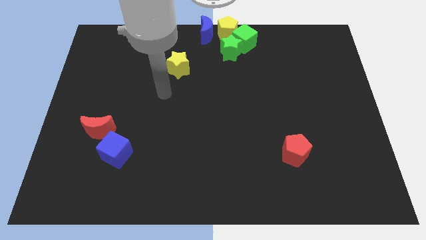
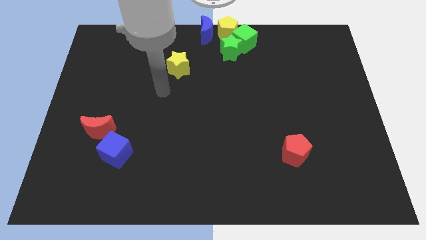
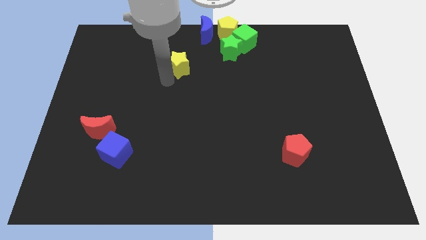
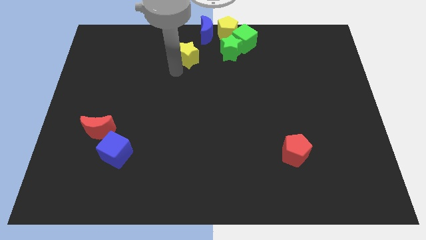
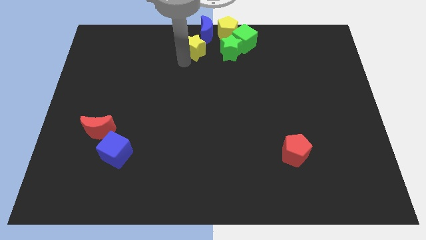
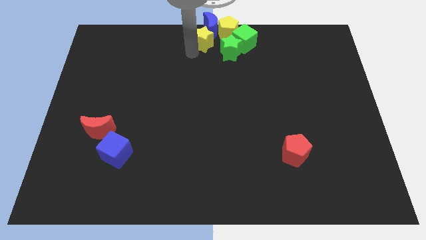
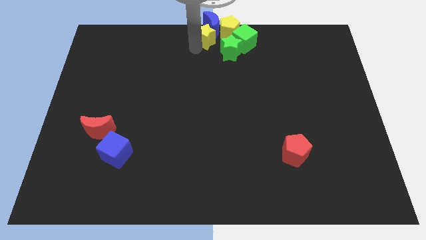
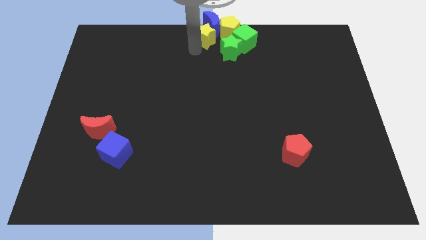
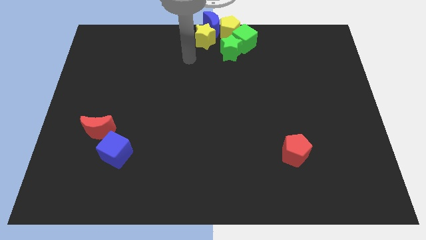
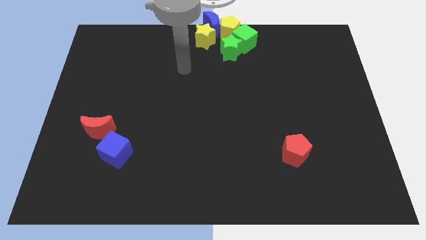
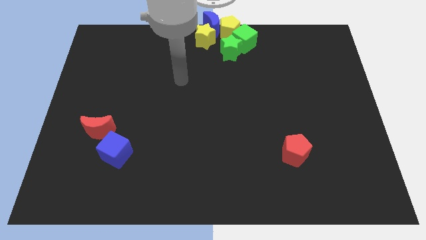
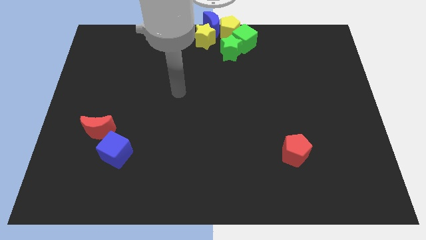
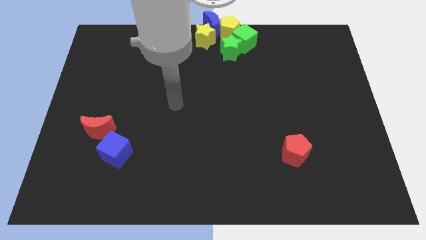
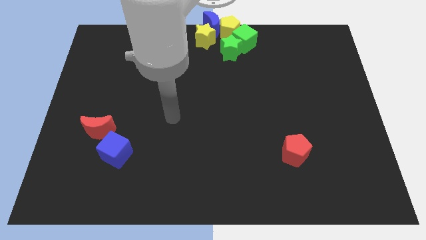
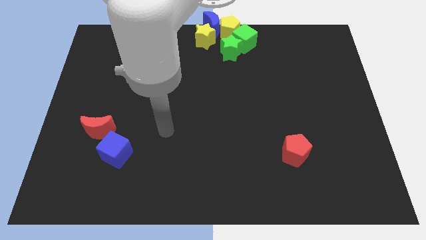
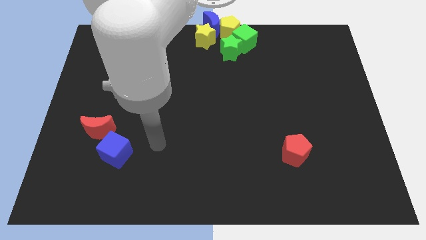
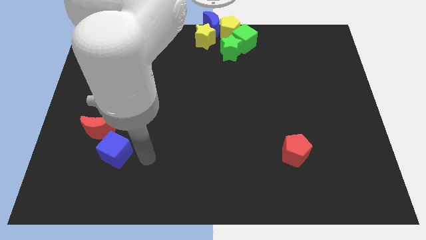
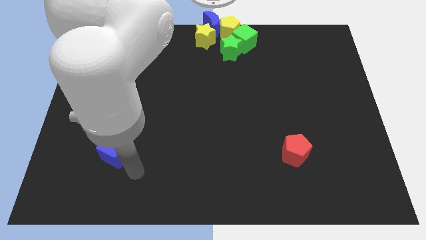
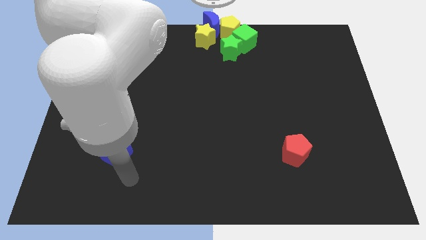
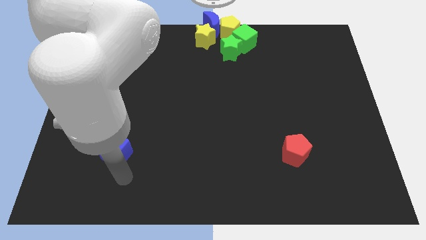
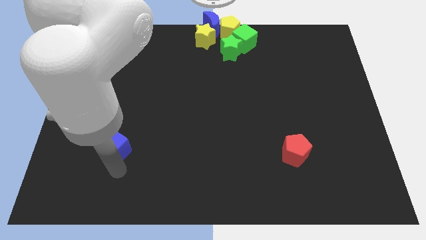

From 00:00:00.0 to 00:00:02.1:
push the yellow star into the blue moon

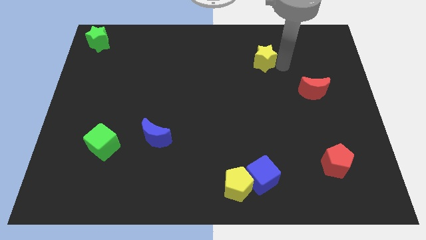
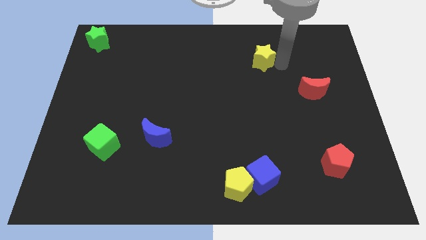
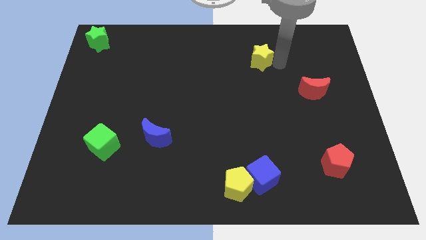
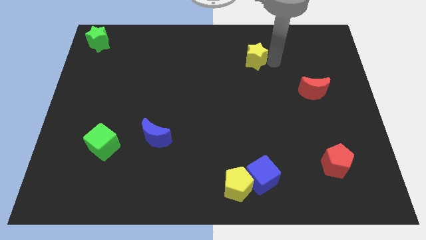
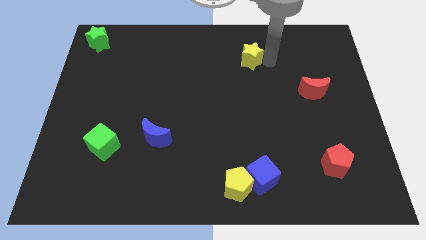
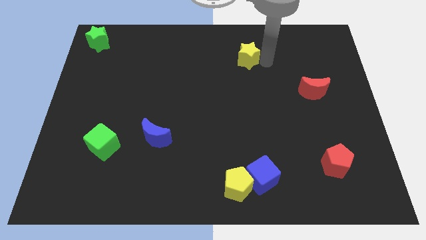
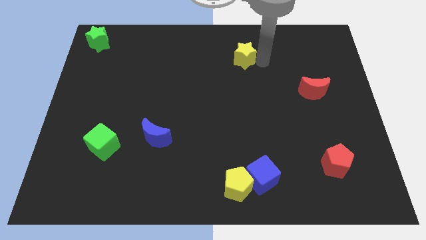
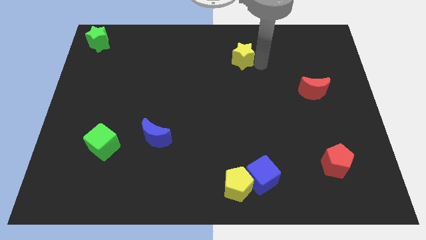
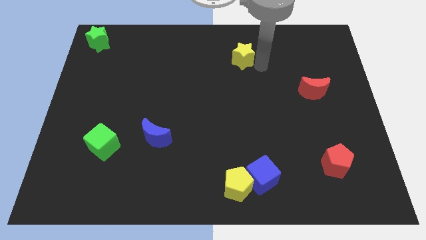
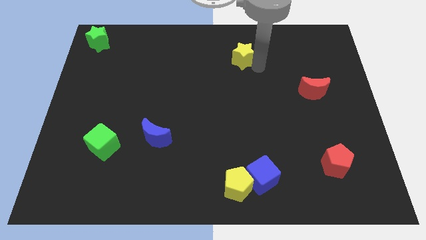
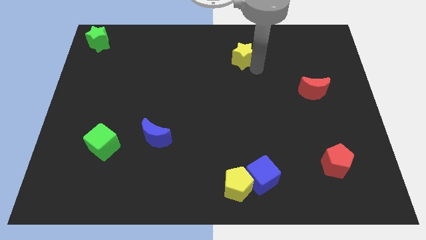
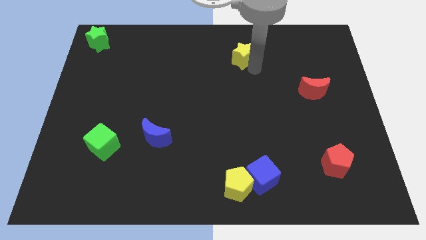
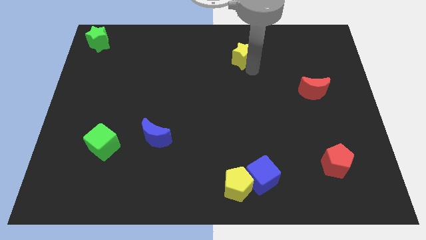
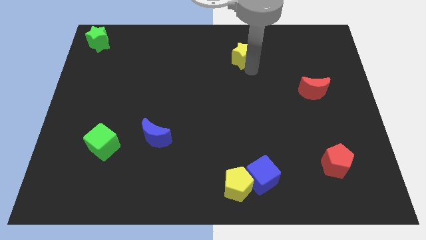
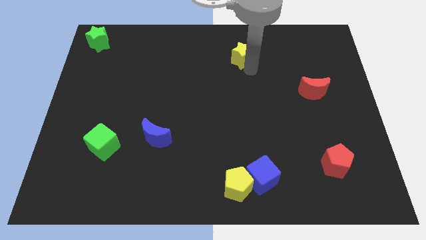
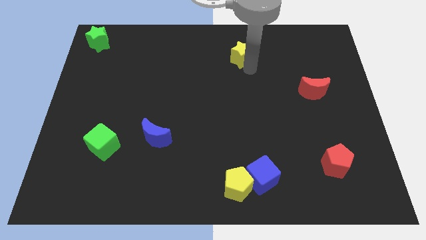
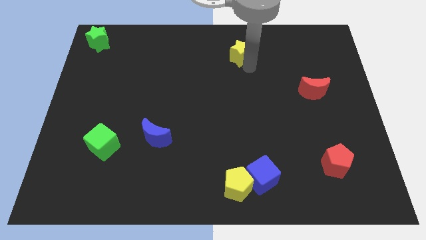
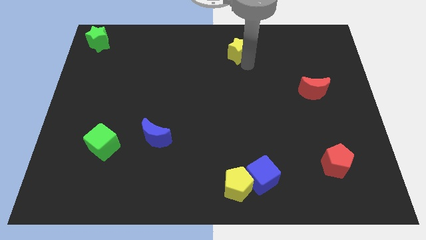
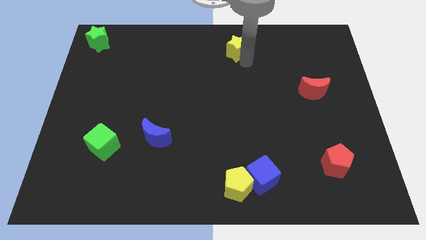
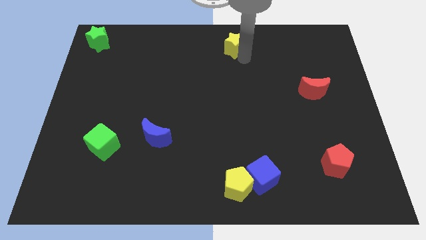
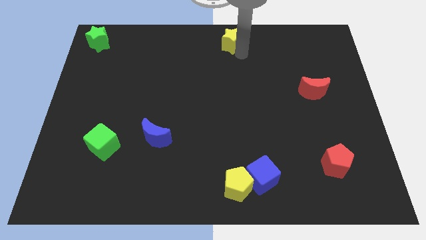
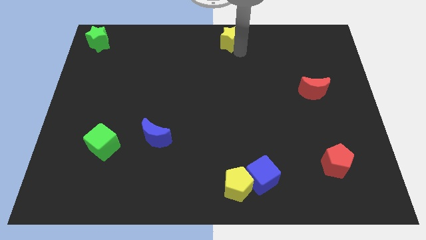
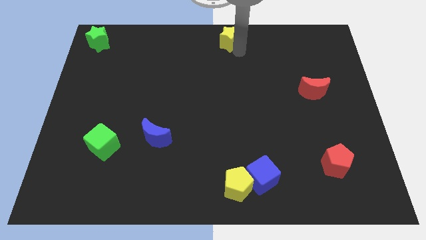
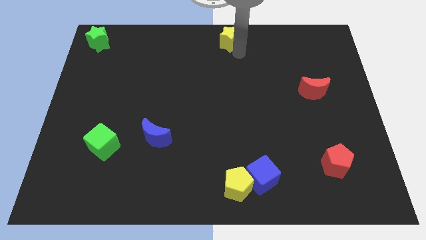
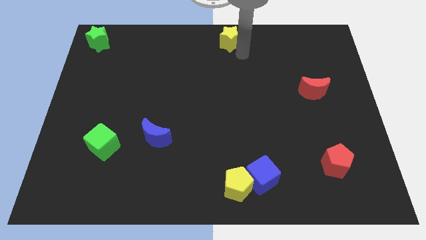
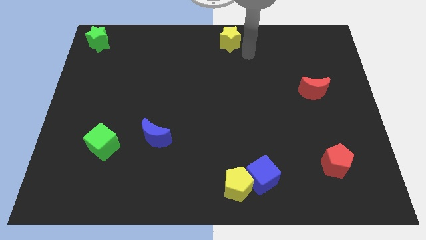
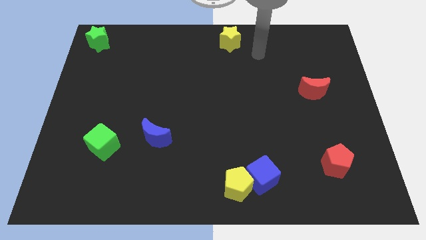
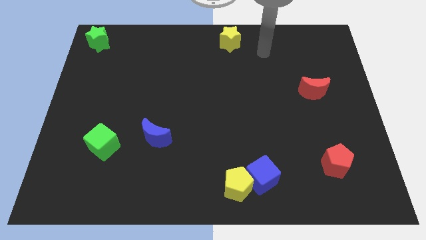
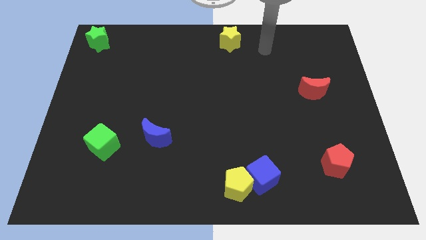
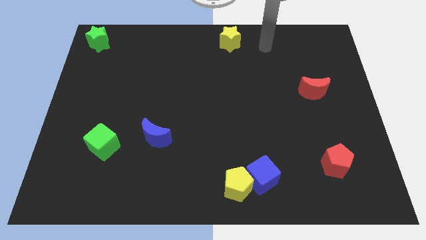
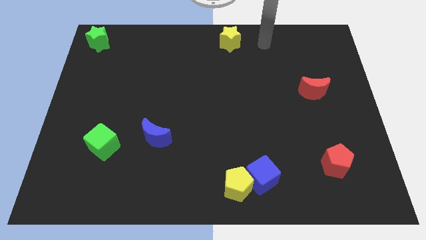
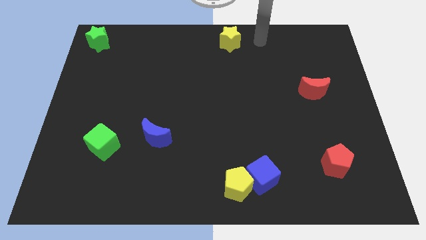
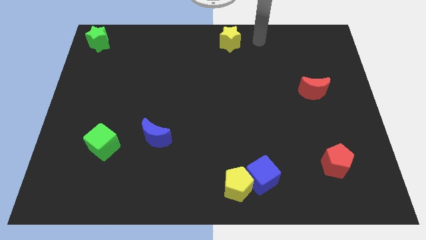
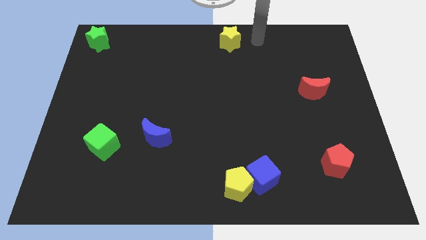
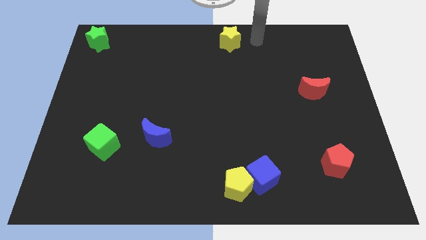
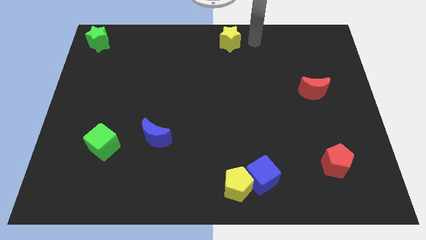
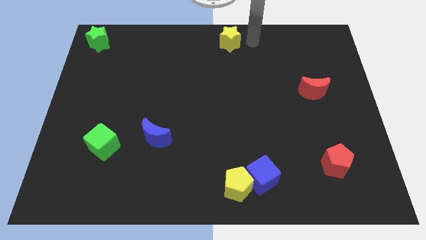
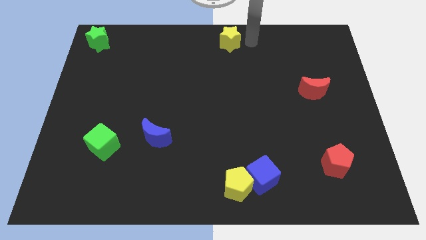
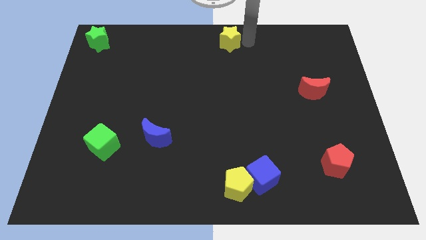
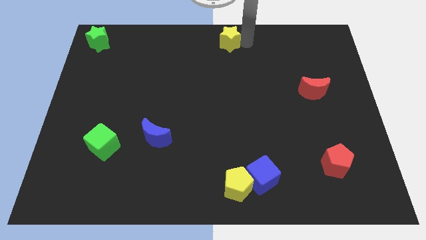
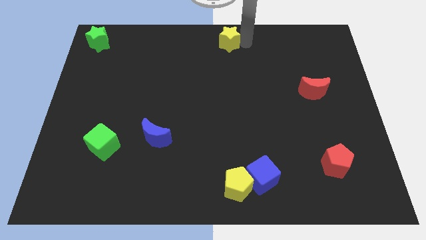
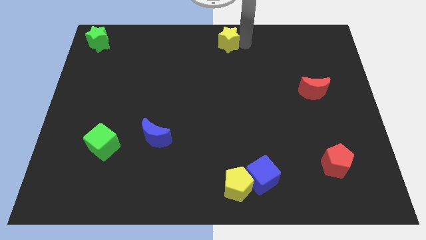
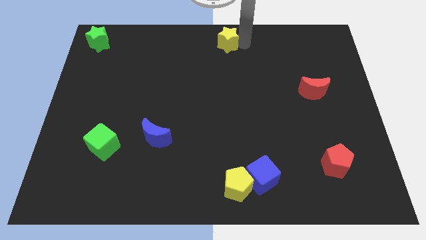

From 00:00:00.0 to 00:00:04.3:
push the yellow star to the top center od the board

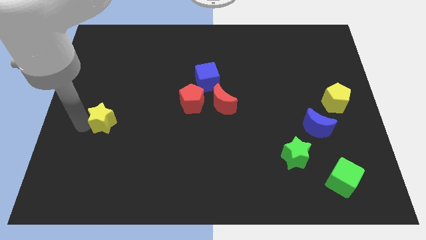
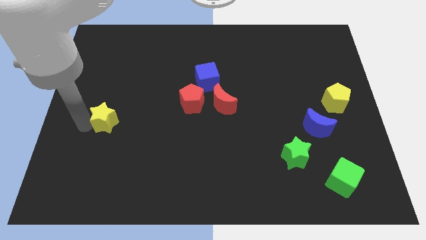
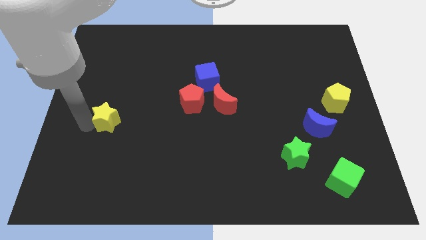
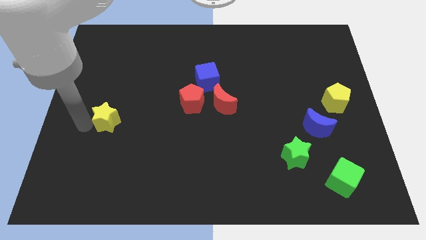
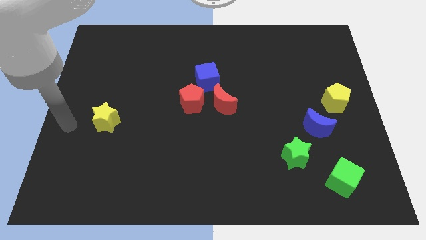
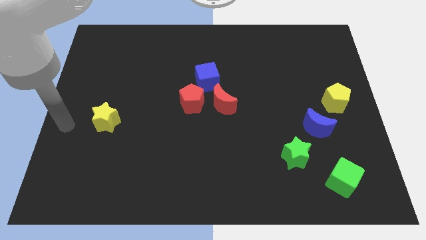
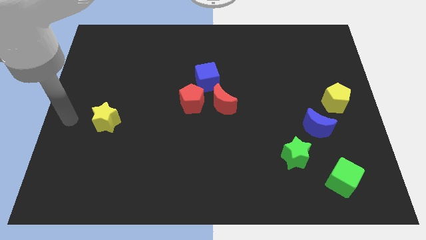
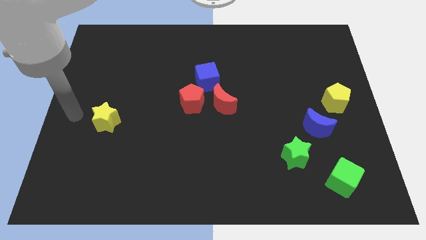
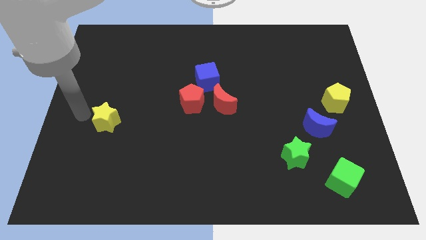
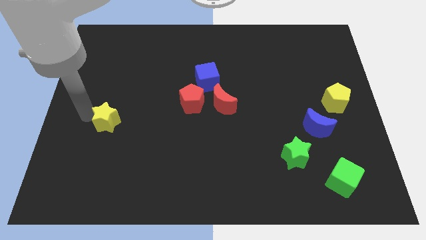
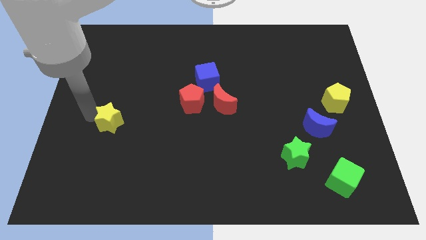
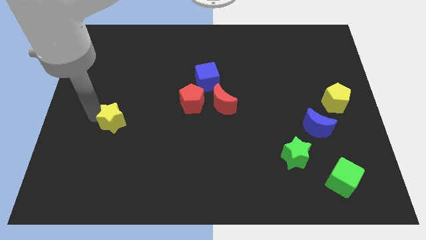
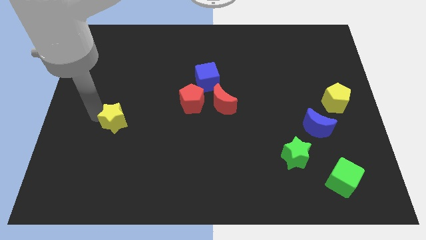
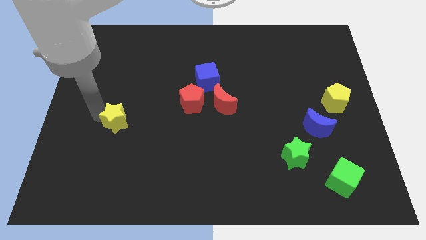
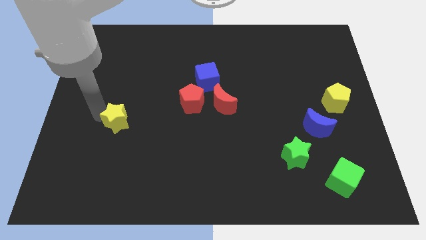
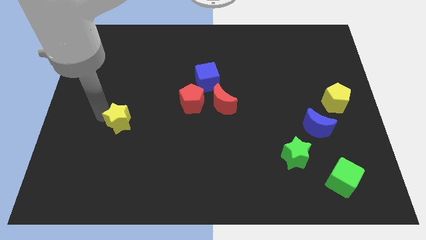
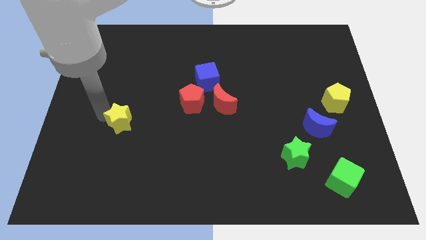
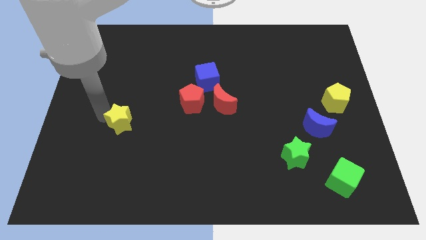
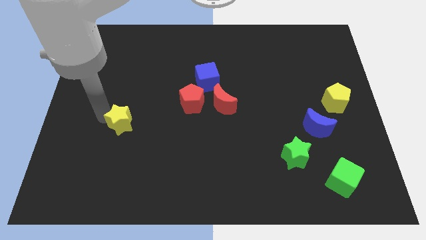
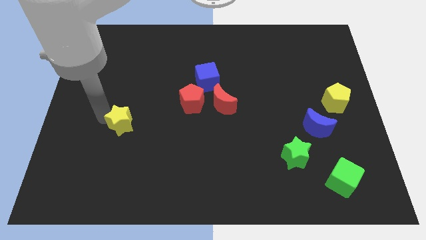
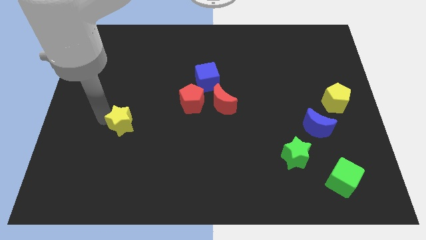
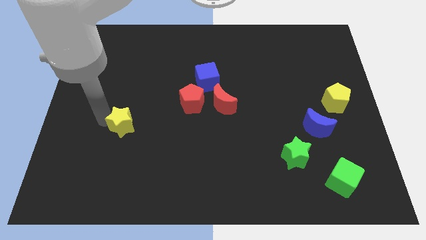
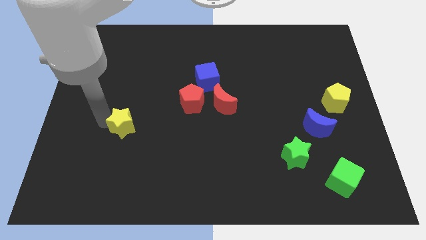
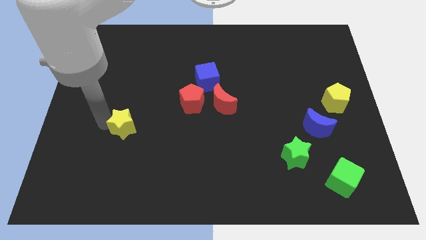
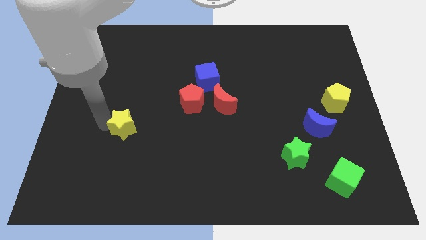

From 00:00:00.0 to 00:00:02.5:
push the yellow star slightly to the right
